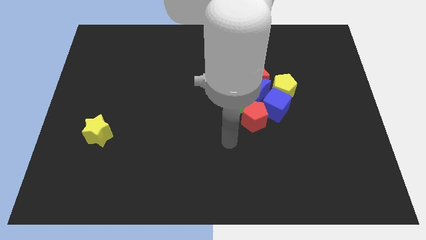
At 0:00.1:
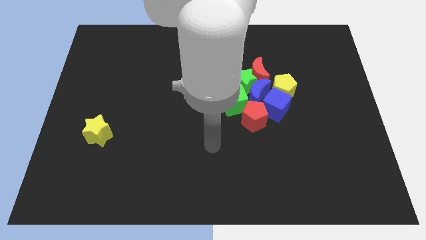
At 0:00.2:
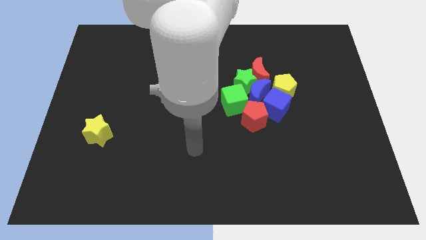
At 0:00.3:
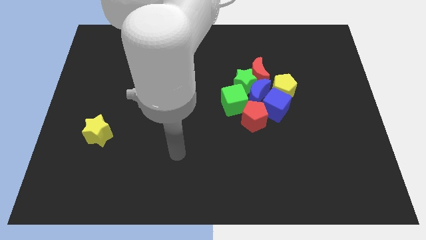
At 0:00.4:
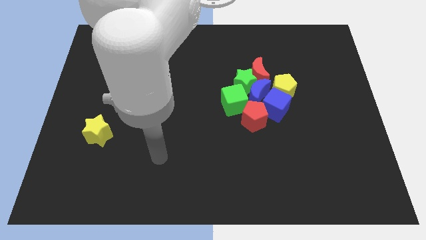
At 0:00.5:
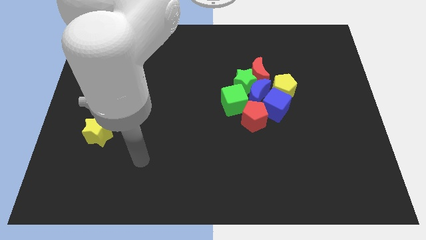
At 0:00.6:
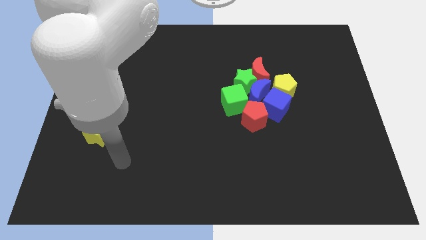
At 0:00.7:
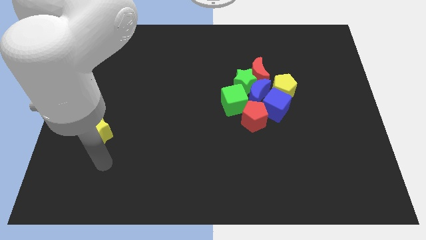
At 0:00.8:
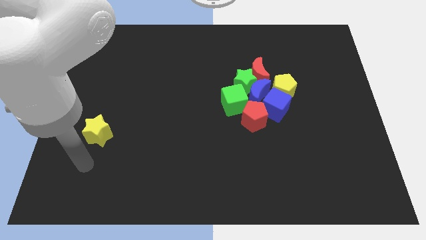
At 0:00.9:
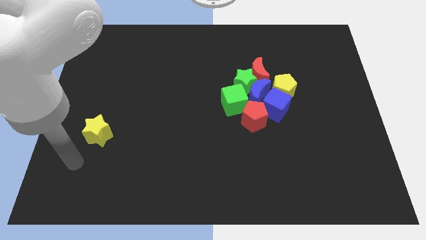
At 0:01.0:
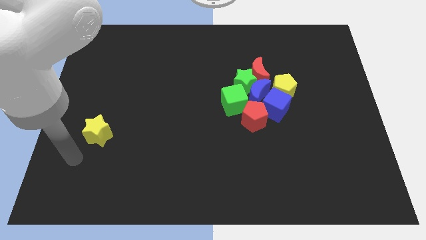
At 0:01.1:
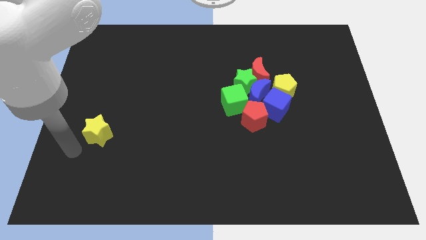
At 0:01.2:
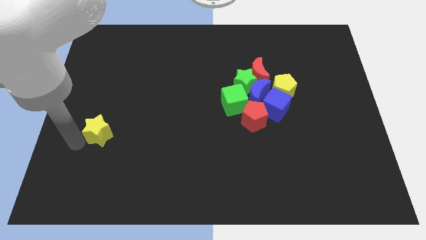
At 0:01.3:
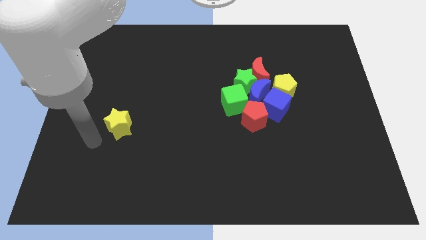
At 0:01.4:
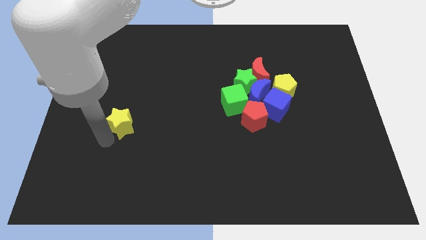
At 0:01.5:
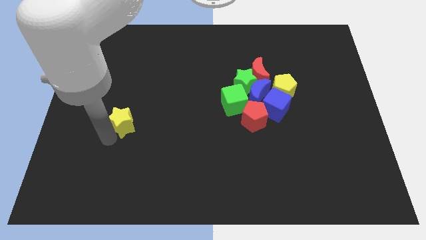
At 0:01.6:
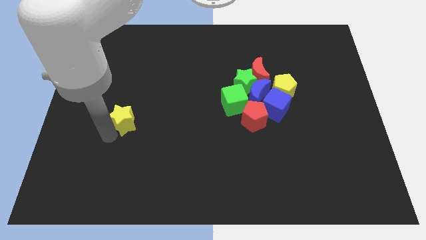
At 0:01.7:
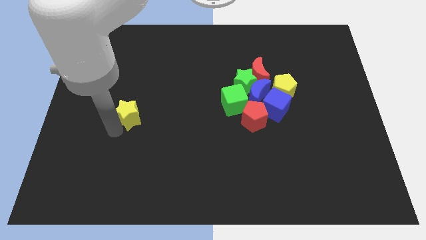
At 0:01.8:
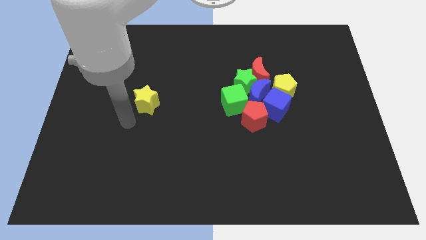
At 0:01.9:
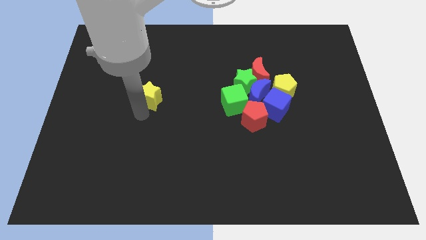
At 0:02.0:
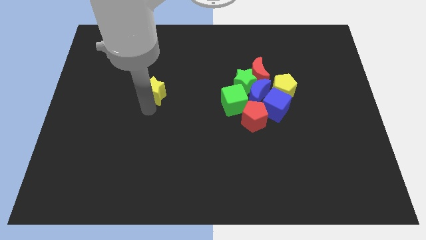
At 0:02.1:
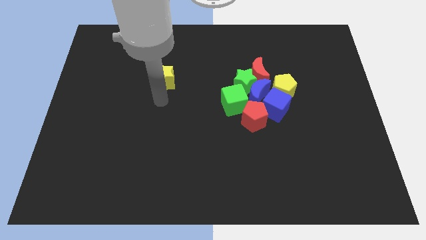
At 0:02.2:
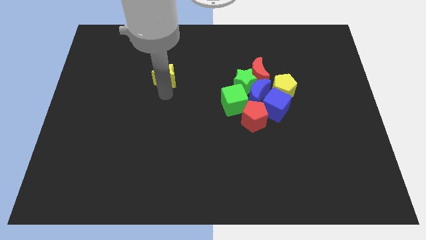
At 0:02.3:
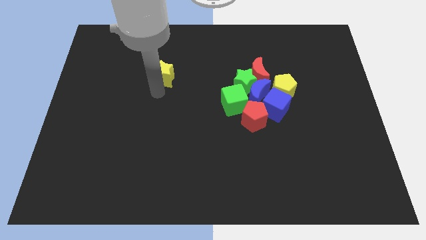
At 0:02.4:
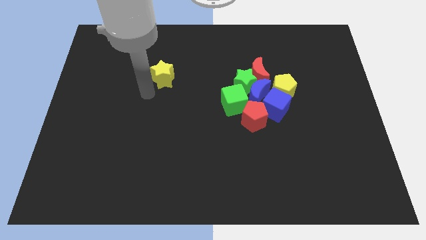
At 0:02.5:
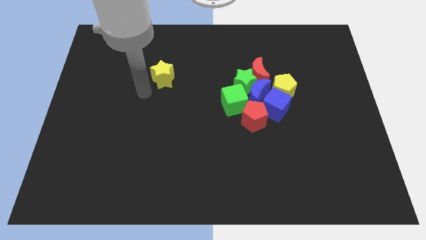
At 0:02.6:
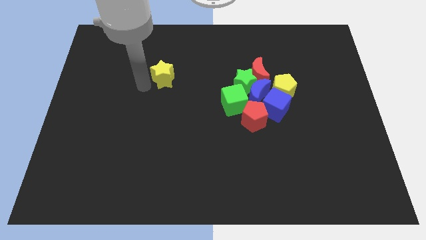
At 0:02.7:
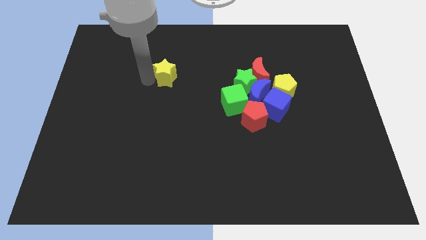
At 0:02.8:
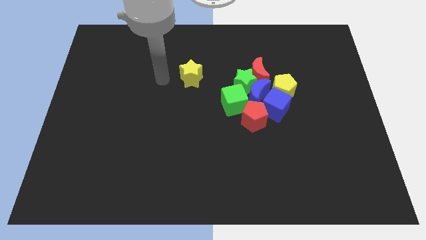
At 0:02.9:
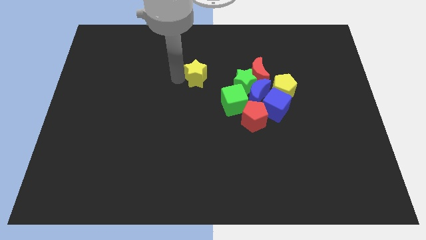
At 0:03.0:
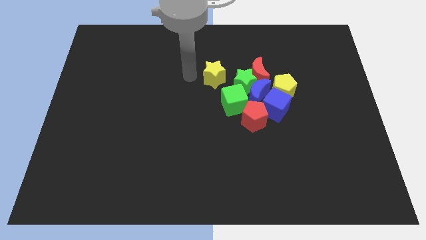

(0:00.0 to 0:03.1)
push the yellow star upward of the board

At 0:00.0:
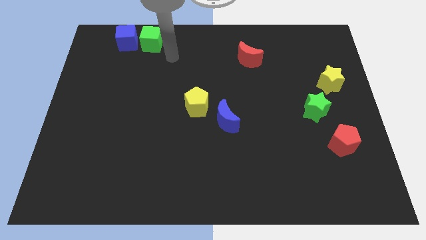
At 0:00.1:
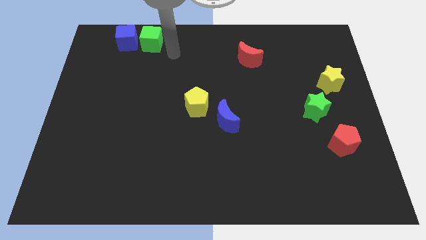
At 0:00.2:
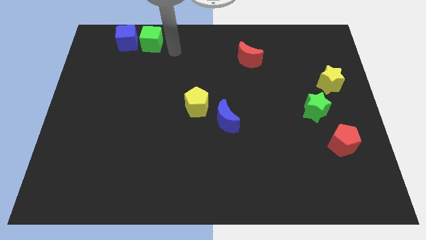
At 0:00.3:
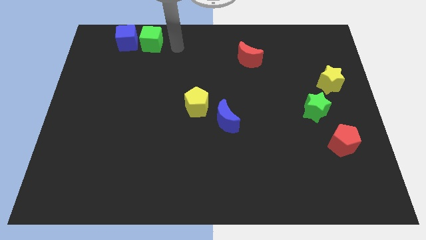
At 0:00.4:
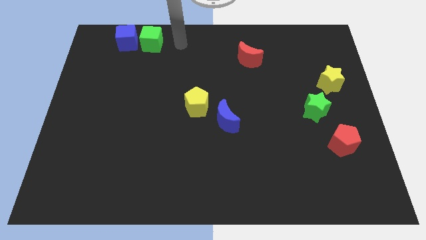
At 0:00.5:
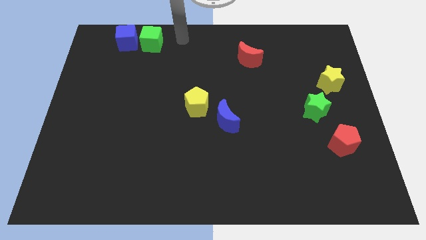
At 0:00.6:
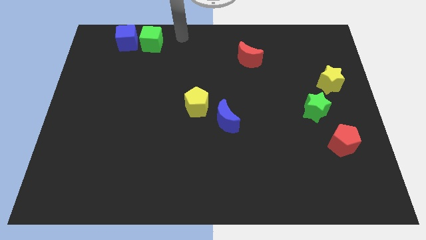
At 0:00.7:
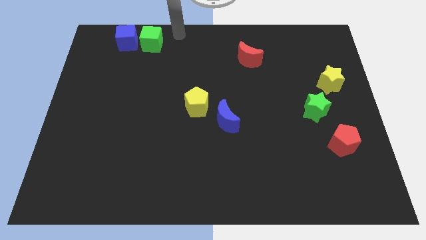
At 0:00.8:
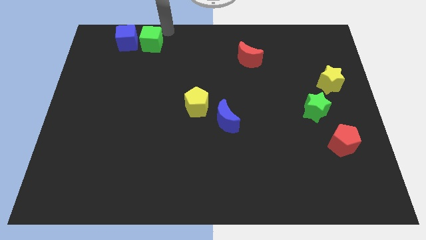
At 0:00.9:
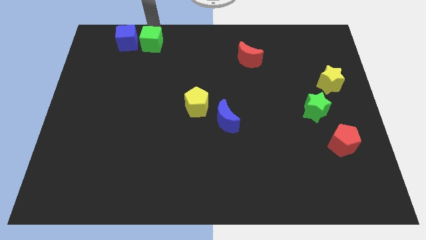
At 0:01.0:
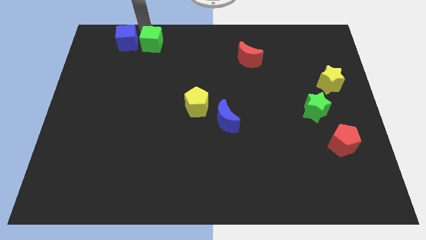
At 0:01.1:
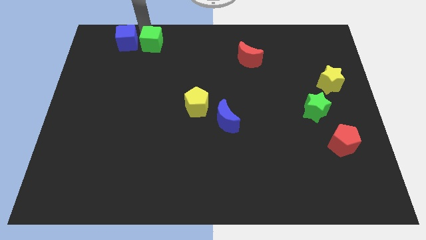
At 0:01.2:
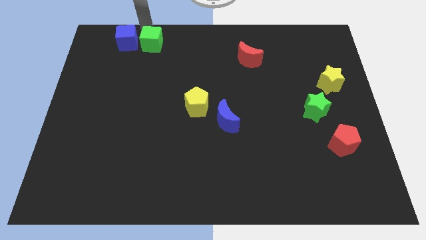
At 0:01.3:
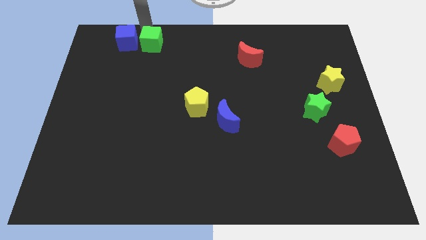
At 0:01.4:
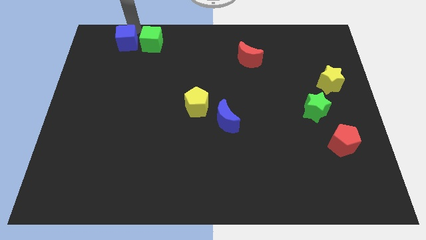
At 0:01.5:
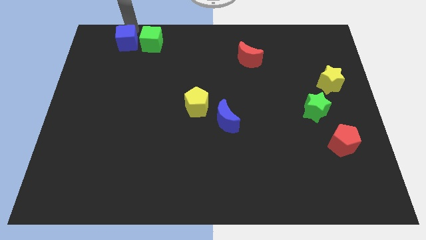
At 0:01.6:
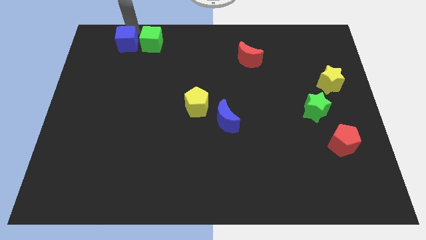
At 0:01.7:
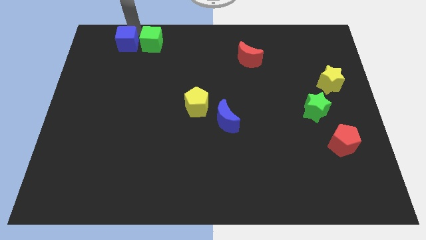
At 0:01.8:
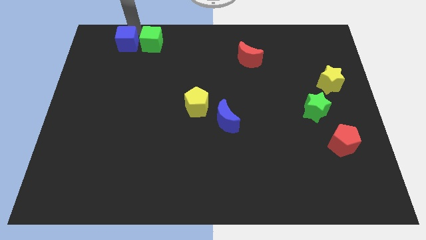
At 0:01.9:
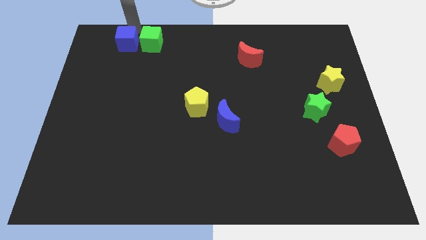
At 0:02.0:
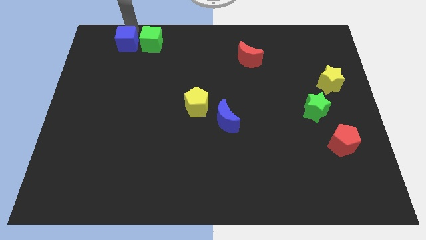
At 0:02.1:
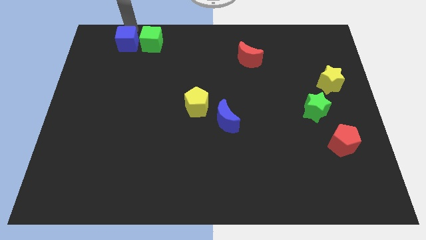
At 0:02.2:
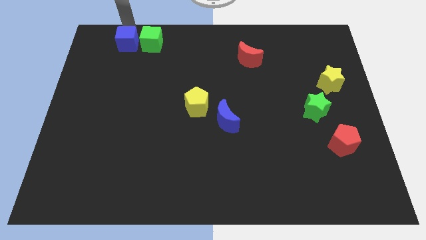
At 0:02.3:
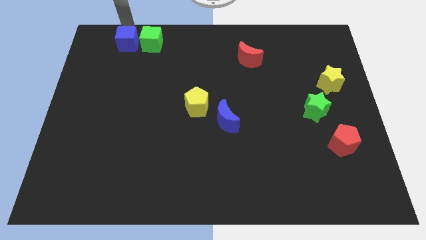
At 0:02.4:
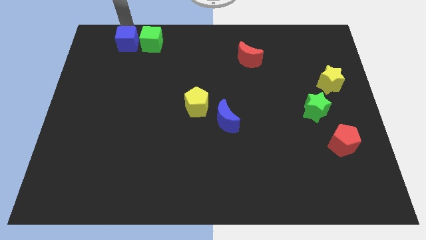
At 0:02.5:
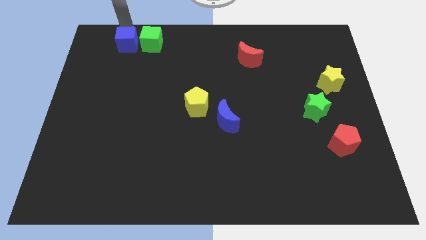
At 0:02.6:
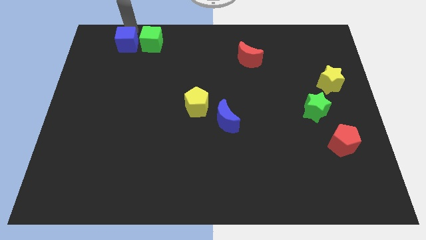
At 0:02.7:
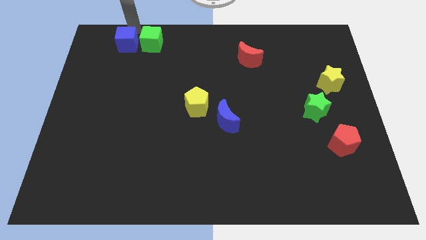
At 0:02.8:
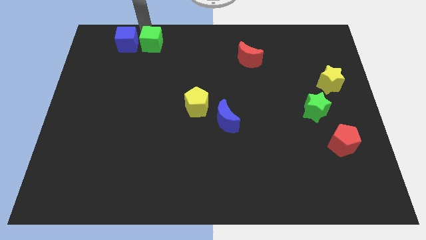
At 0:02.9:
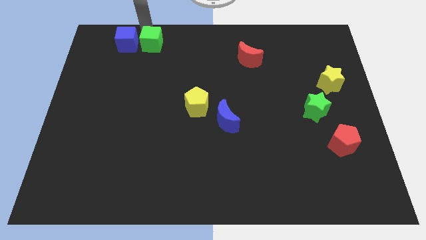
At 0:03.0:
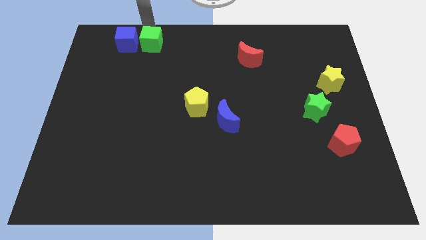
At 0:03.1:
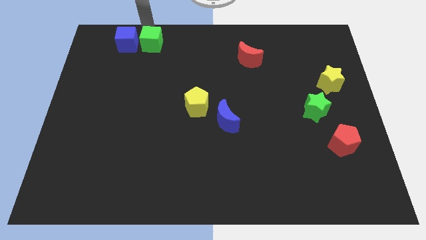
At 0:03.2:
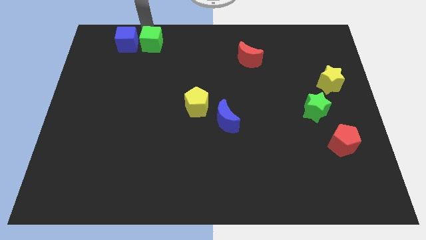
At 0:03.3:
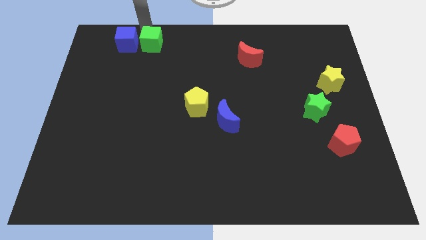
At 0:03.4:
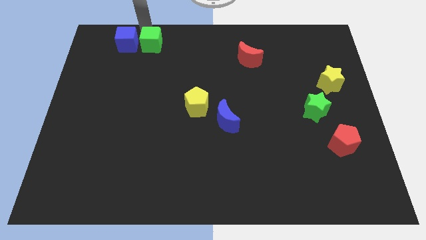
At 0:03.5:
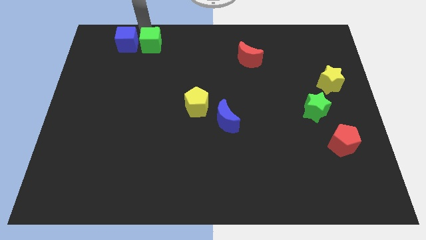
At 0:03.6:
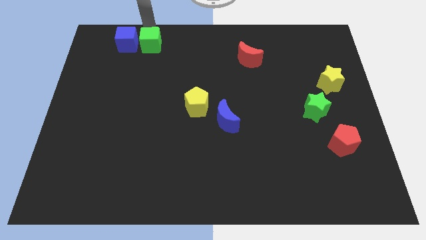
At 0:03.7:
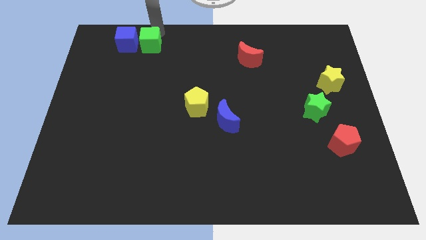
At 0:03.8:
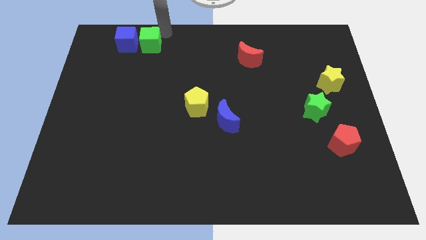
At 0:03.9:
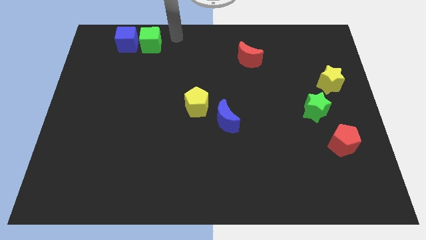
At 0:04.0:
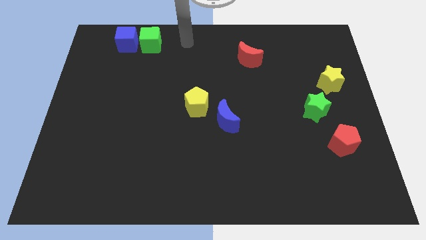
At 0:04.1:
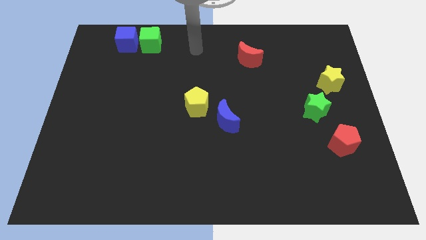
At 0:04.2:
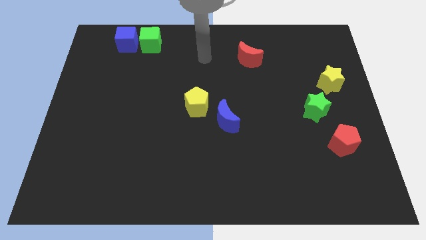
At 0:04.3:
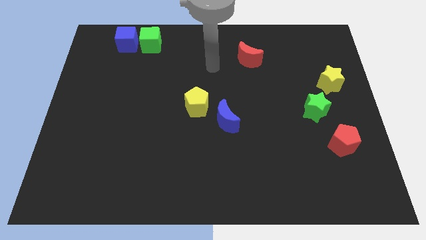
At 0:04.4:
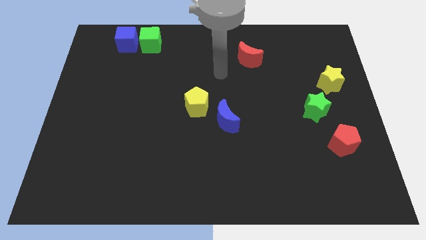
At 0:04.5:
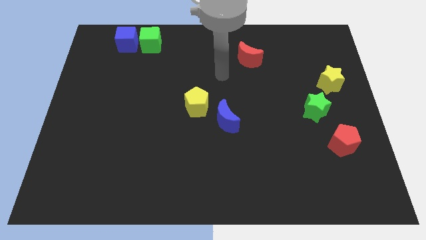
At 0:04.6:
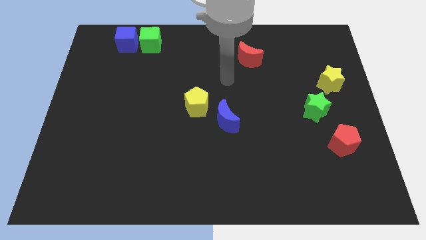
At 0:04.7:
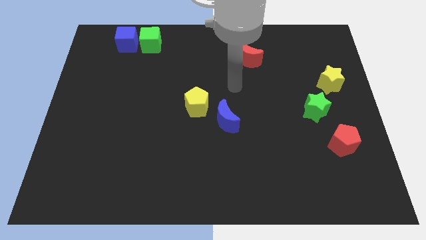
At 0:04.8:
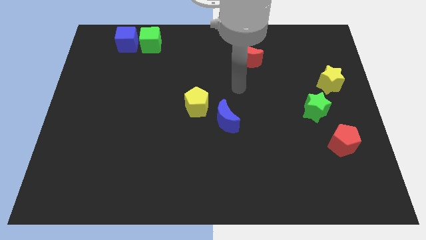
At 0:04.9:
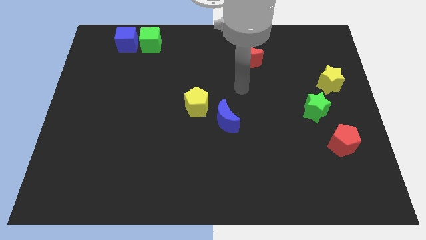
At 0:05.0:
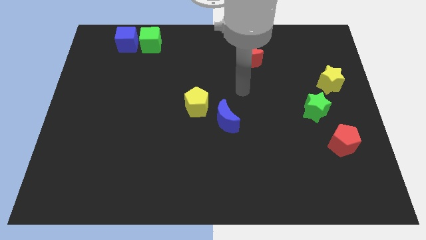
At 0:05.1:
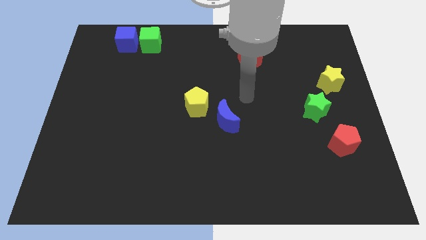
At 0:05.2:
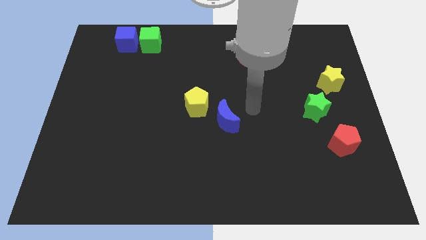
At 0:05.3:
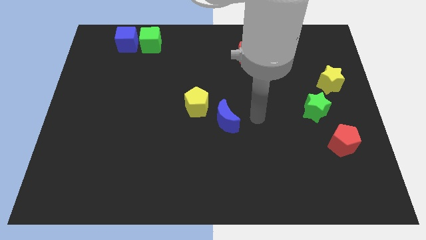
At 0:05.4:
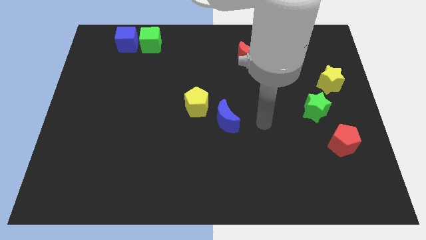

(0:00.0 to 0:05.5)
slightly move the cubes to the bottom of the board

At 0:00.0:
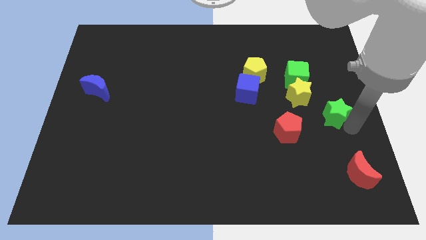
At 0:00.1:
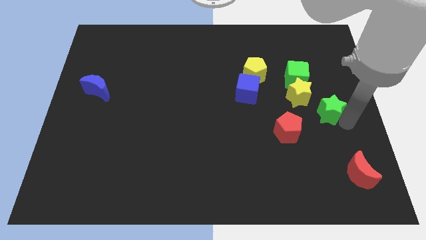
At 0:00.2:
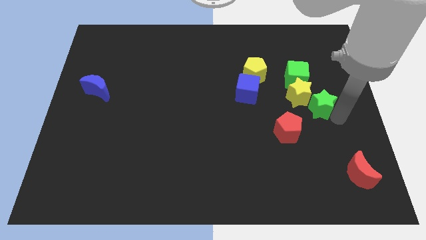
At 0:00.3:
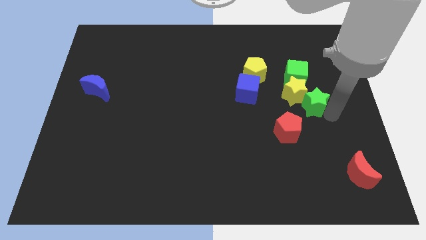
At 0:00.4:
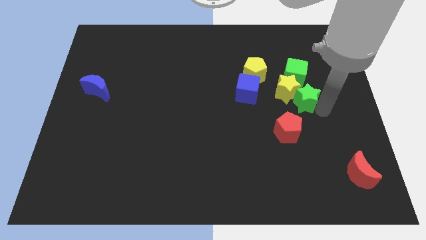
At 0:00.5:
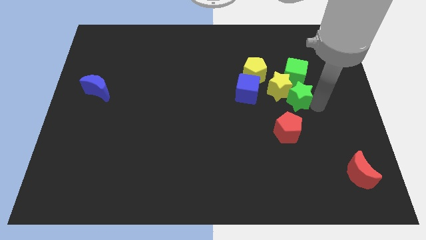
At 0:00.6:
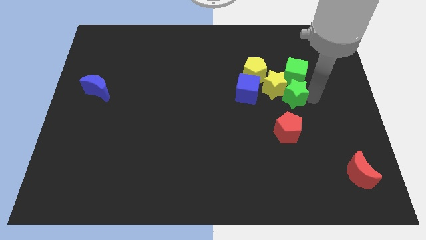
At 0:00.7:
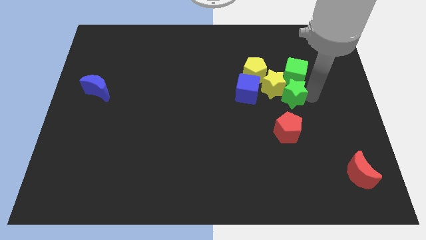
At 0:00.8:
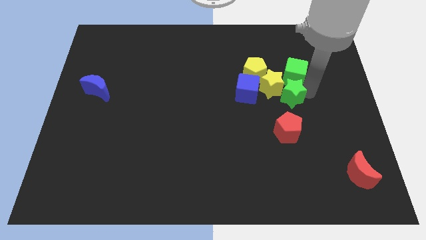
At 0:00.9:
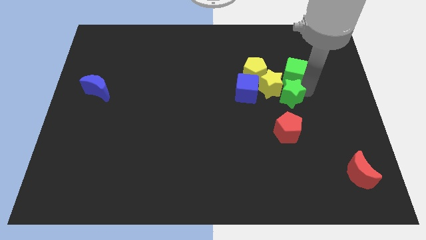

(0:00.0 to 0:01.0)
push green star into the yellow star
